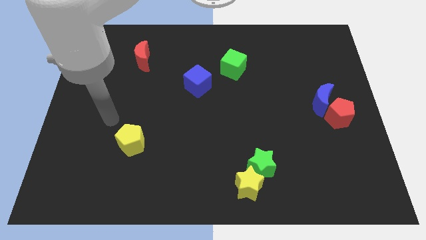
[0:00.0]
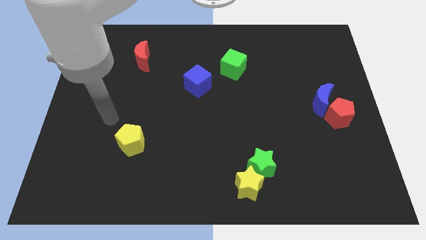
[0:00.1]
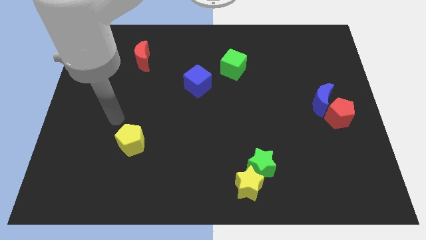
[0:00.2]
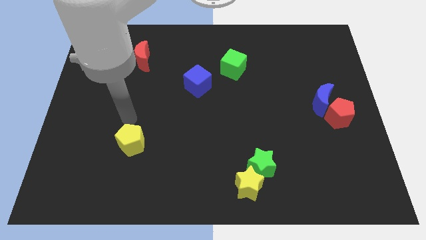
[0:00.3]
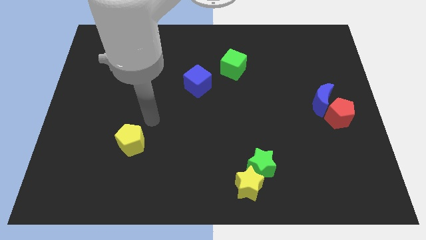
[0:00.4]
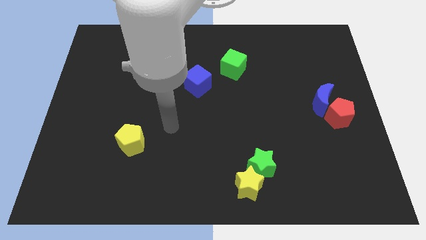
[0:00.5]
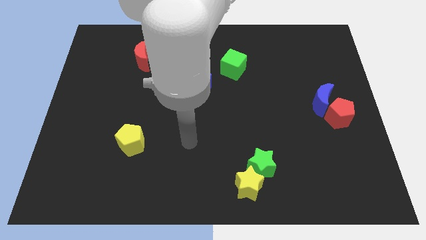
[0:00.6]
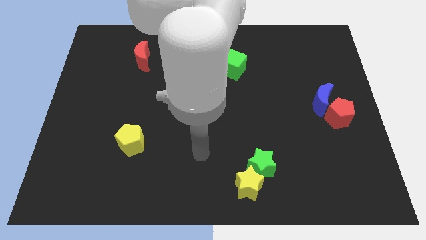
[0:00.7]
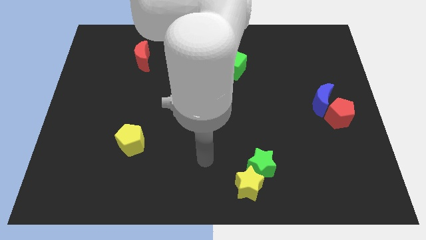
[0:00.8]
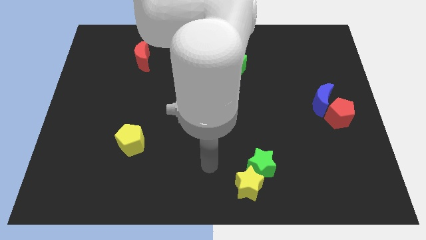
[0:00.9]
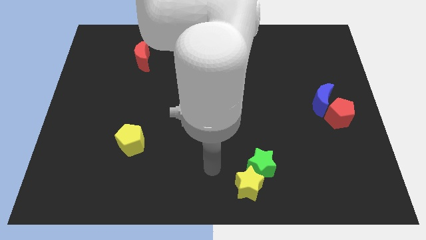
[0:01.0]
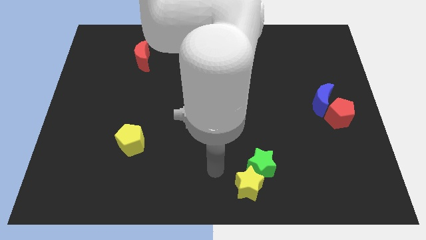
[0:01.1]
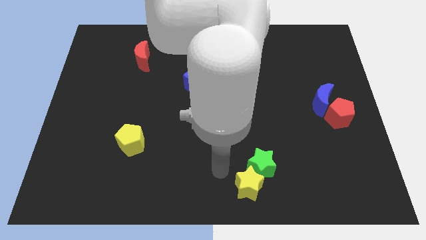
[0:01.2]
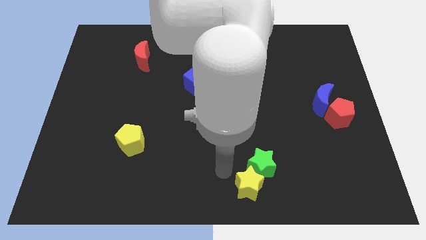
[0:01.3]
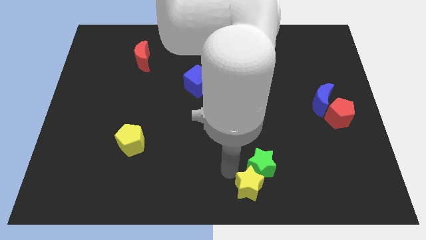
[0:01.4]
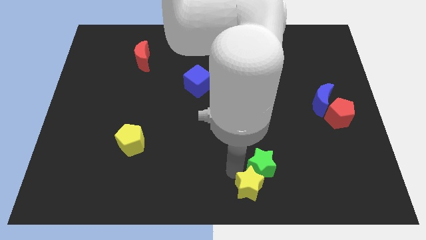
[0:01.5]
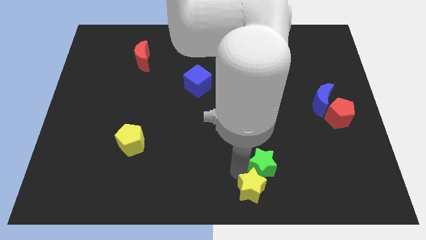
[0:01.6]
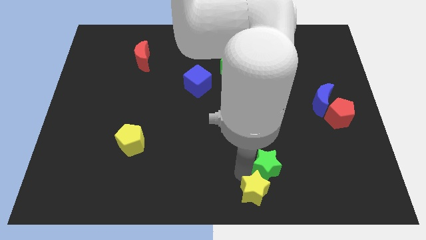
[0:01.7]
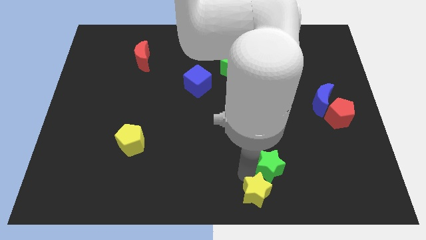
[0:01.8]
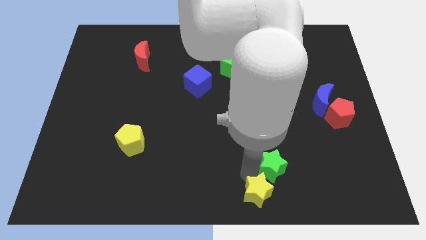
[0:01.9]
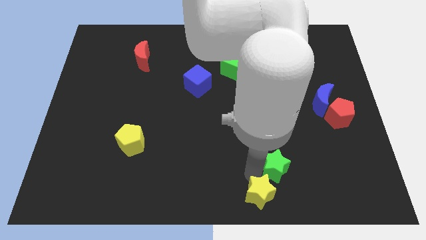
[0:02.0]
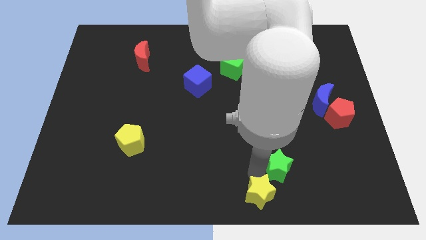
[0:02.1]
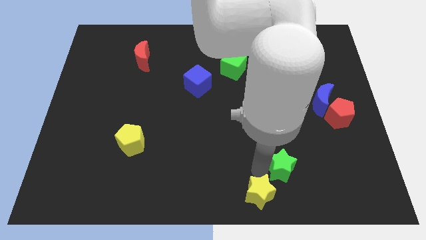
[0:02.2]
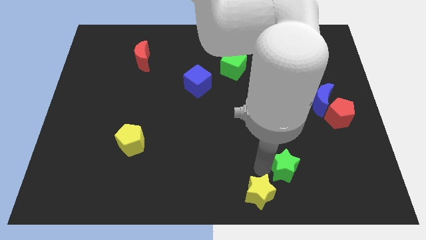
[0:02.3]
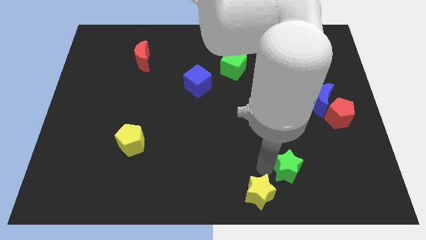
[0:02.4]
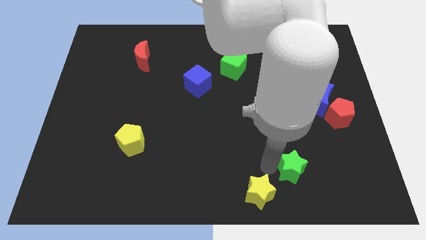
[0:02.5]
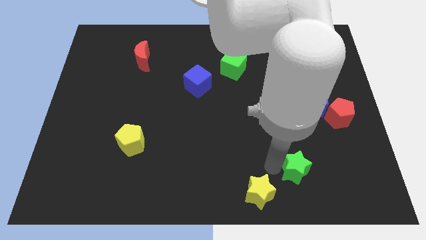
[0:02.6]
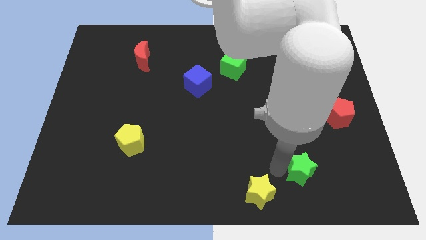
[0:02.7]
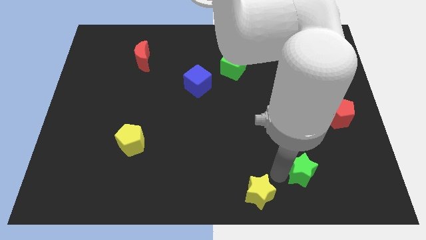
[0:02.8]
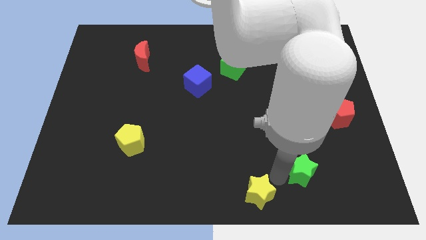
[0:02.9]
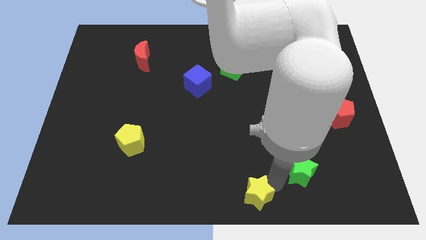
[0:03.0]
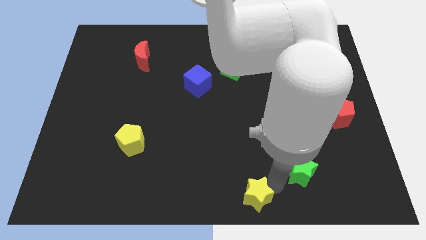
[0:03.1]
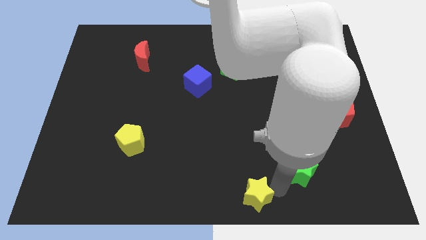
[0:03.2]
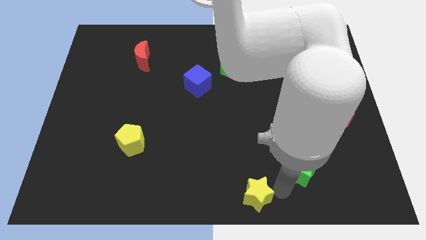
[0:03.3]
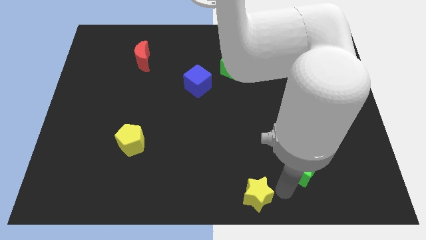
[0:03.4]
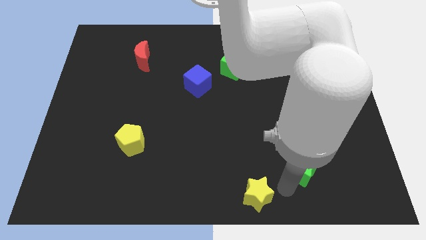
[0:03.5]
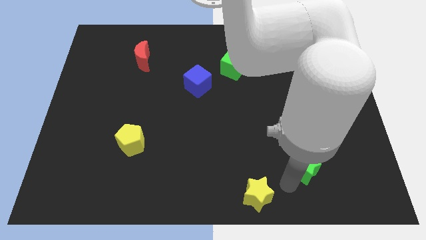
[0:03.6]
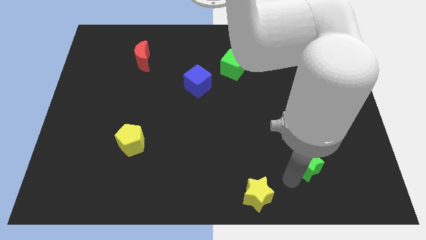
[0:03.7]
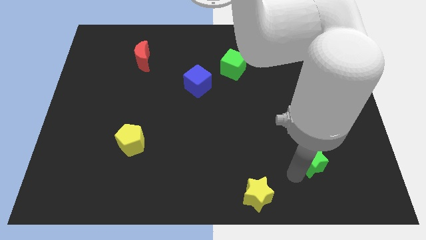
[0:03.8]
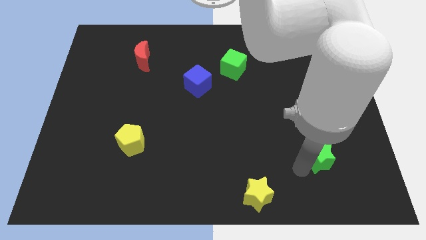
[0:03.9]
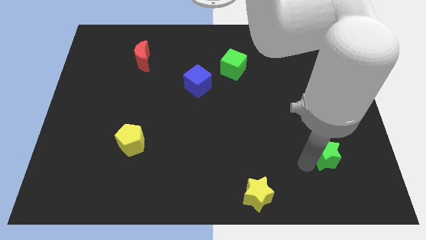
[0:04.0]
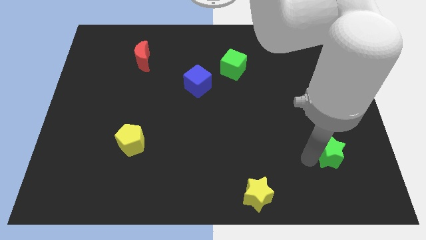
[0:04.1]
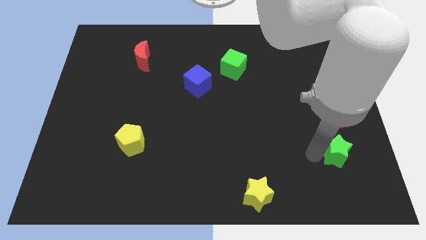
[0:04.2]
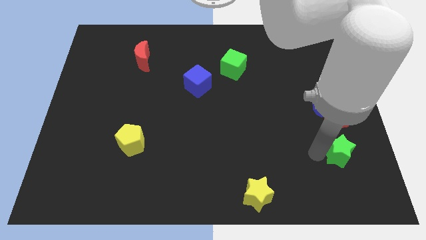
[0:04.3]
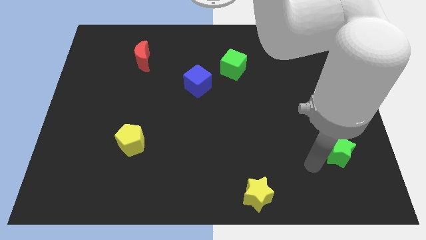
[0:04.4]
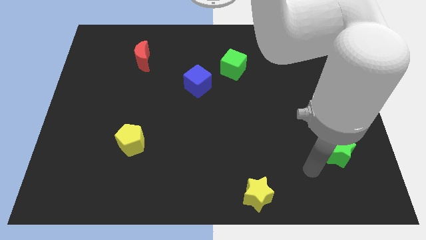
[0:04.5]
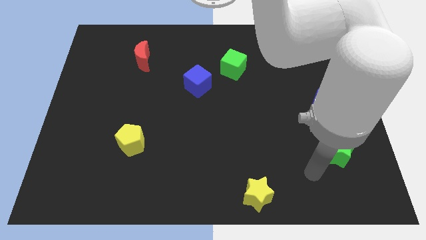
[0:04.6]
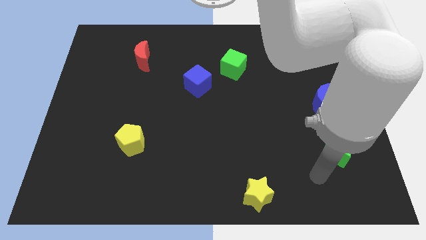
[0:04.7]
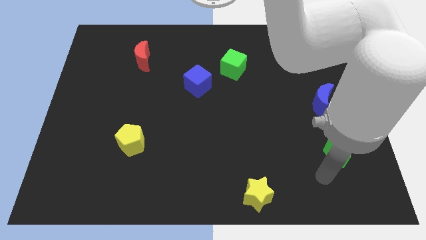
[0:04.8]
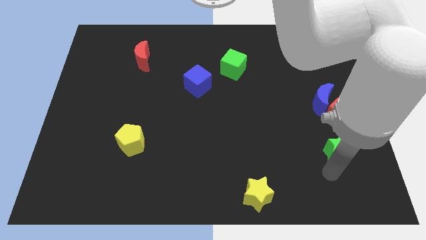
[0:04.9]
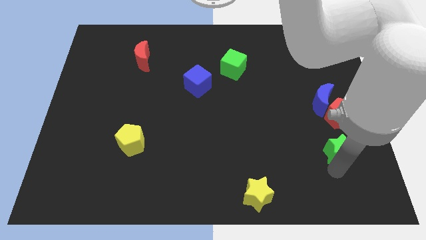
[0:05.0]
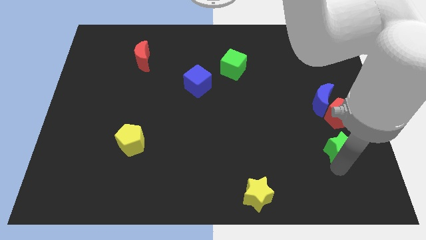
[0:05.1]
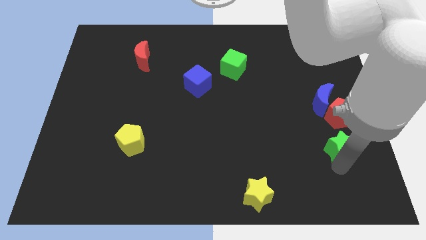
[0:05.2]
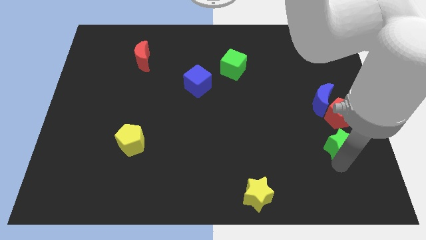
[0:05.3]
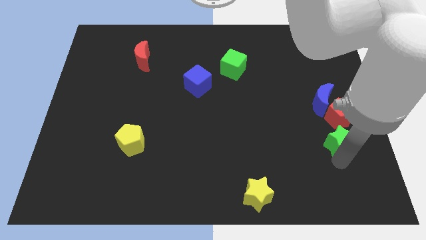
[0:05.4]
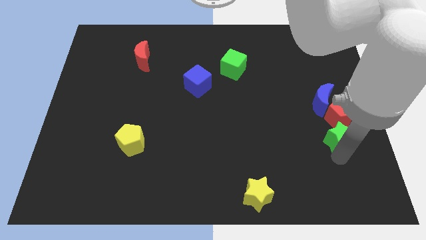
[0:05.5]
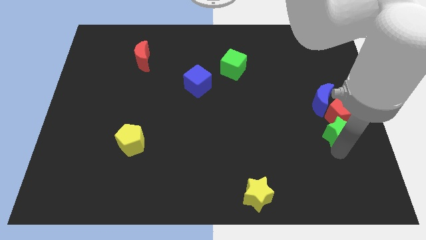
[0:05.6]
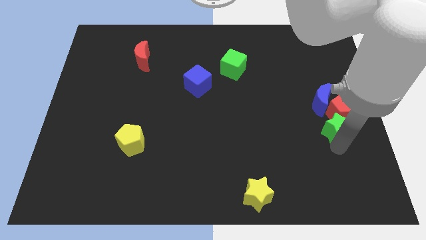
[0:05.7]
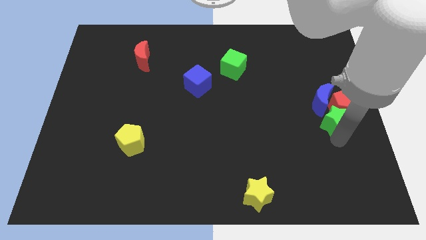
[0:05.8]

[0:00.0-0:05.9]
put the green star close to the red pentagon

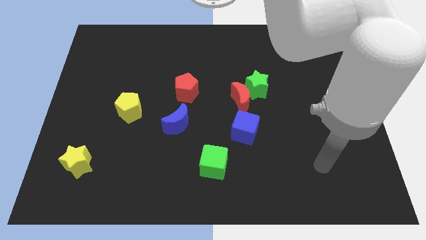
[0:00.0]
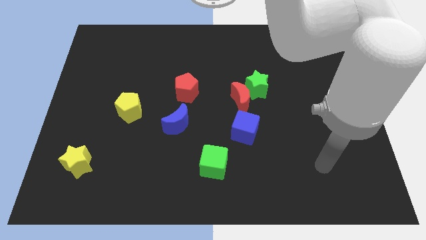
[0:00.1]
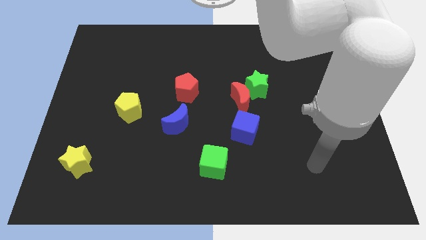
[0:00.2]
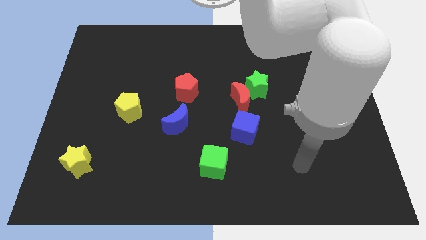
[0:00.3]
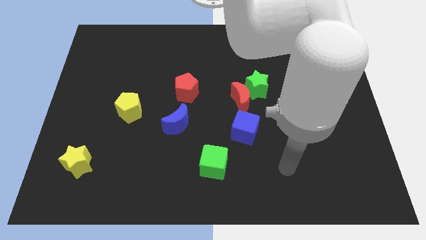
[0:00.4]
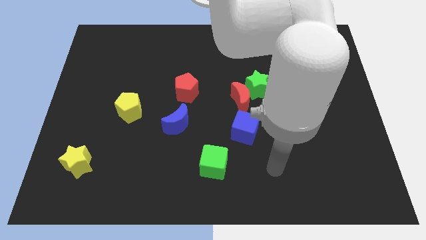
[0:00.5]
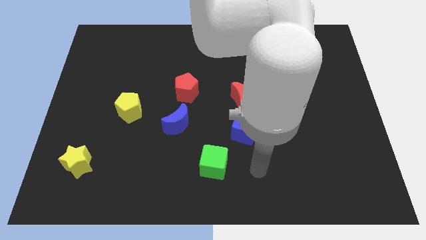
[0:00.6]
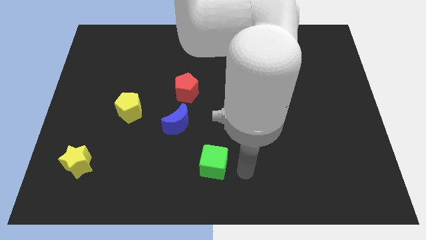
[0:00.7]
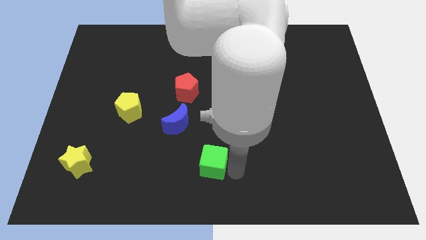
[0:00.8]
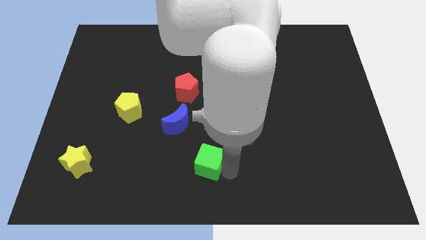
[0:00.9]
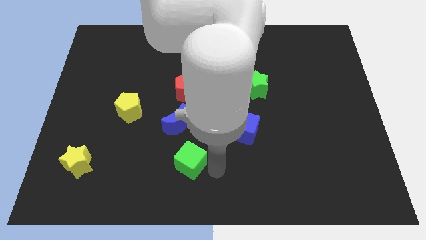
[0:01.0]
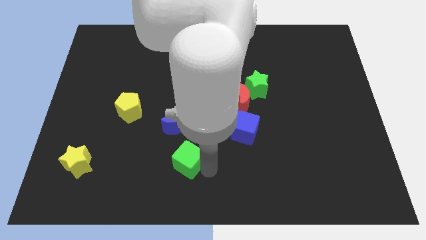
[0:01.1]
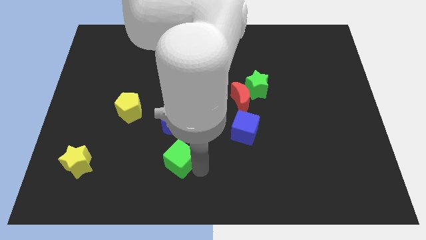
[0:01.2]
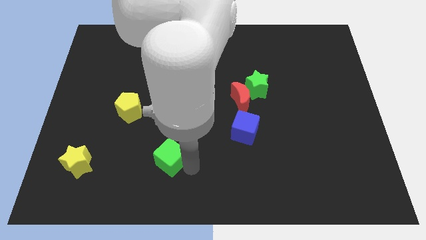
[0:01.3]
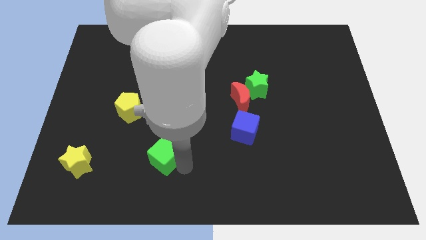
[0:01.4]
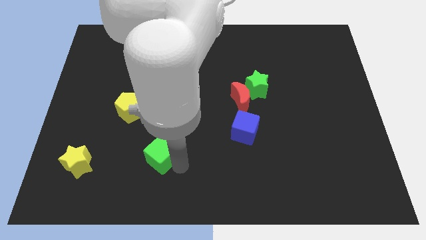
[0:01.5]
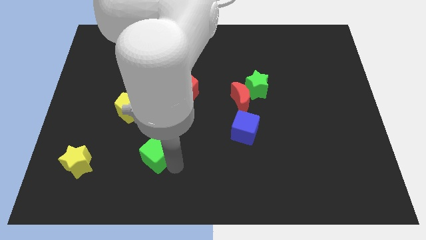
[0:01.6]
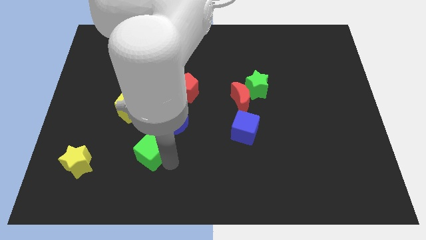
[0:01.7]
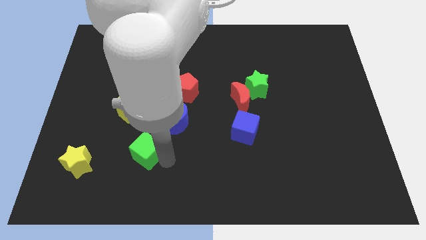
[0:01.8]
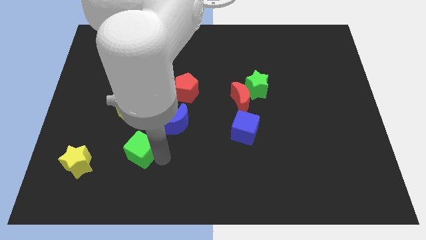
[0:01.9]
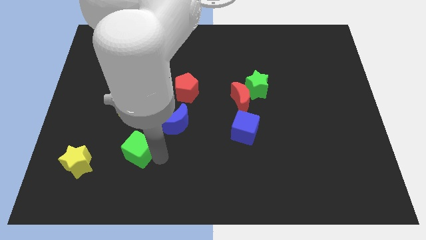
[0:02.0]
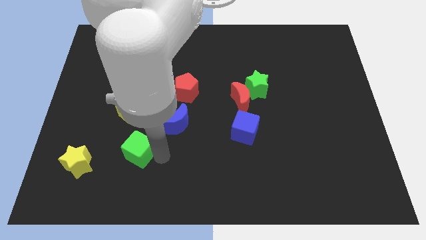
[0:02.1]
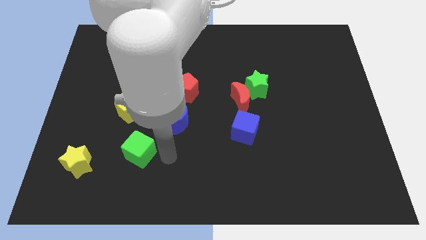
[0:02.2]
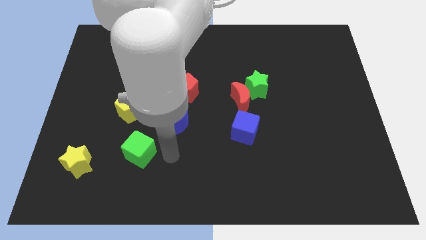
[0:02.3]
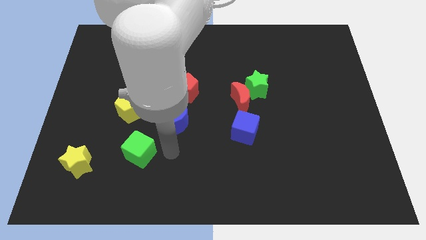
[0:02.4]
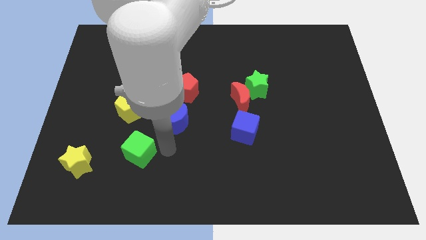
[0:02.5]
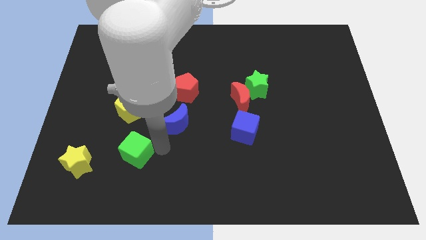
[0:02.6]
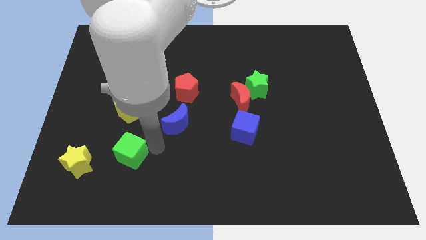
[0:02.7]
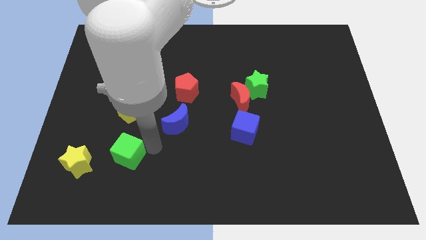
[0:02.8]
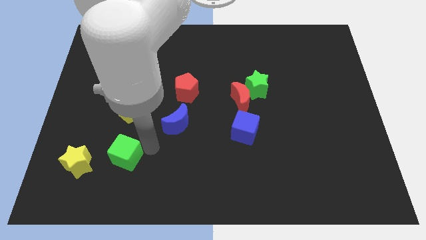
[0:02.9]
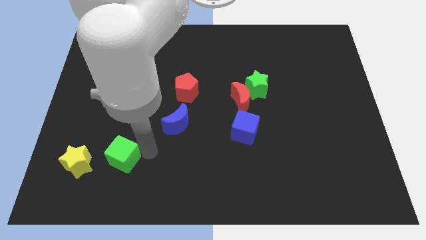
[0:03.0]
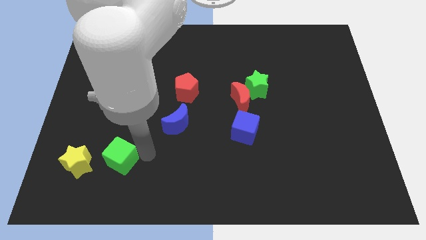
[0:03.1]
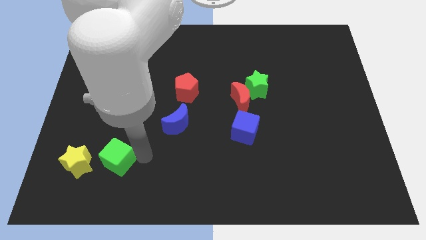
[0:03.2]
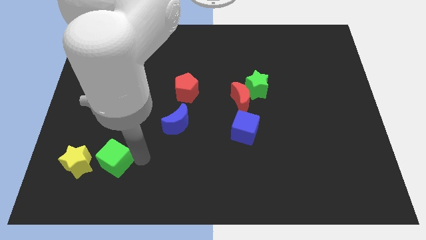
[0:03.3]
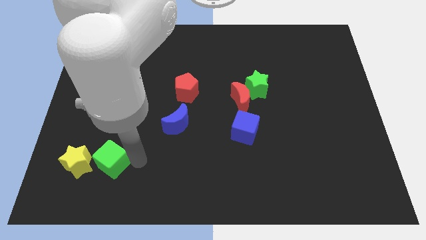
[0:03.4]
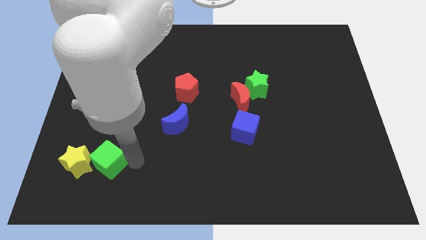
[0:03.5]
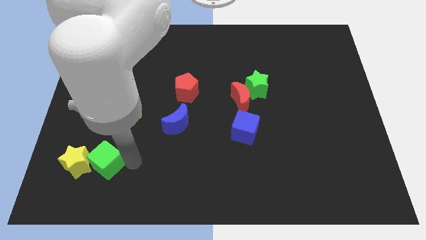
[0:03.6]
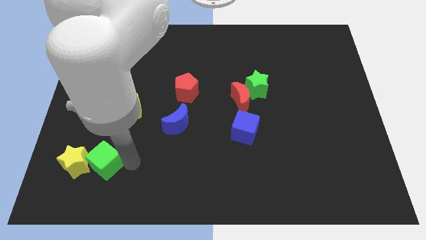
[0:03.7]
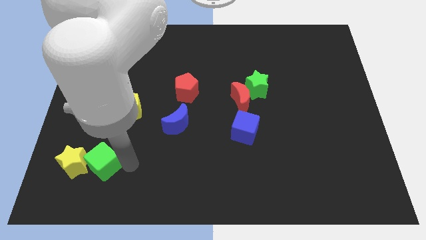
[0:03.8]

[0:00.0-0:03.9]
put the green cube close to the yellow star
